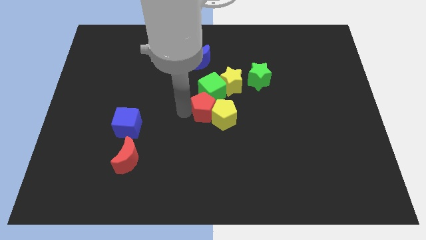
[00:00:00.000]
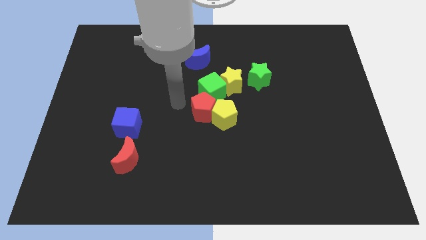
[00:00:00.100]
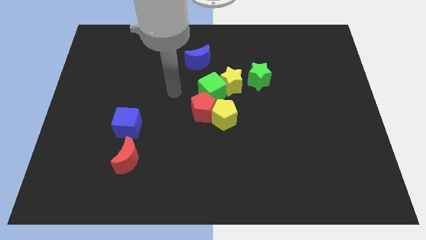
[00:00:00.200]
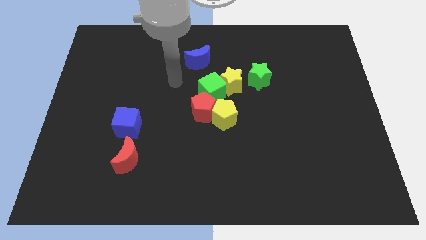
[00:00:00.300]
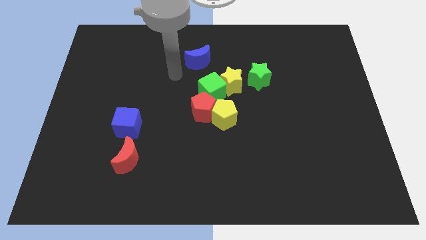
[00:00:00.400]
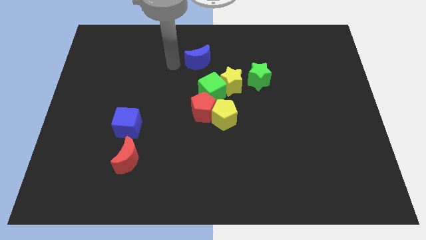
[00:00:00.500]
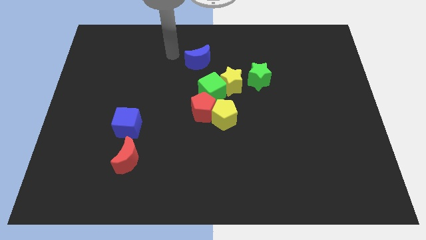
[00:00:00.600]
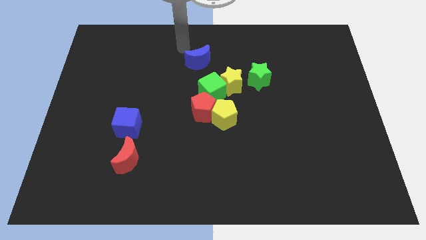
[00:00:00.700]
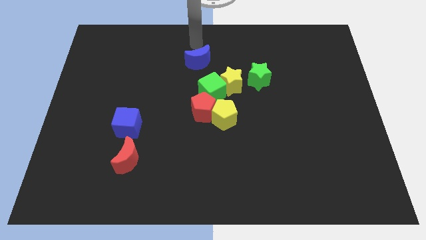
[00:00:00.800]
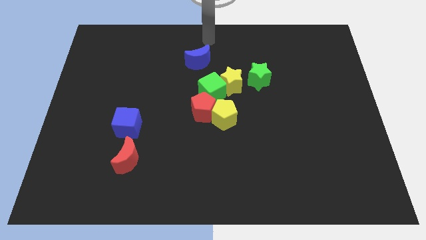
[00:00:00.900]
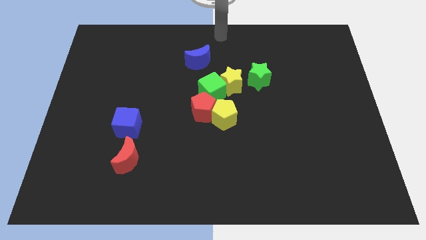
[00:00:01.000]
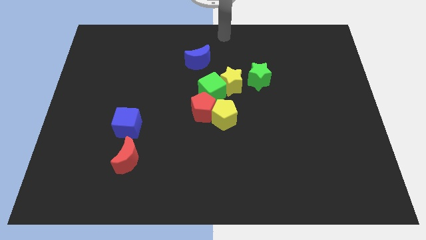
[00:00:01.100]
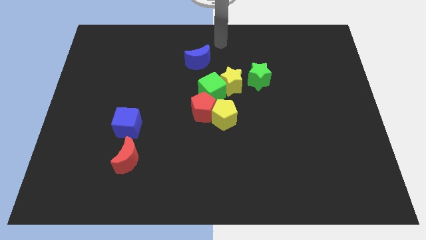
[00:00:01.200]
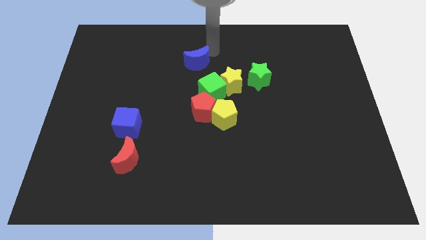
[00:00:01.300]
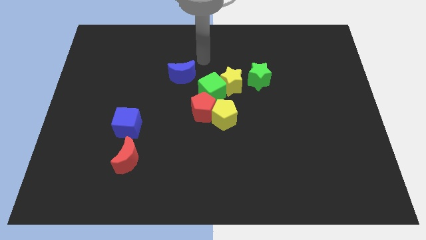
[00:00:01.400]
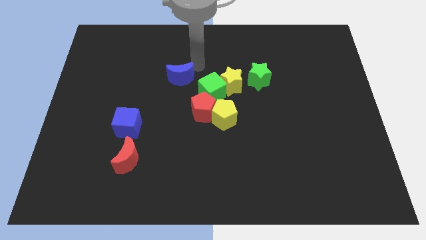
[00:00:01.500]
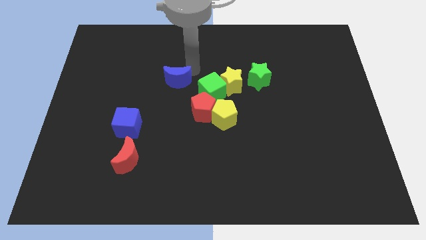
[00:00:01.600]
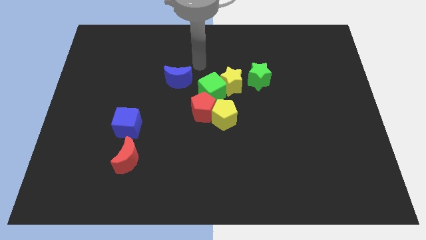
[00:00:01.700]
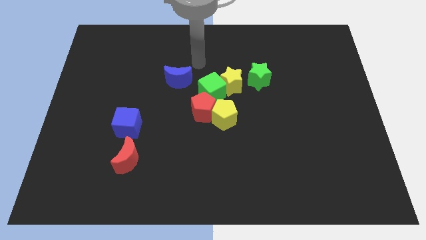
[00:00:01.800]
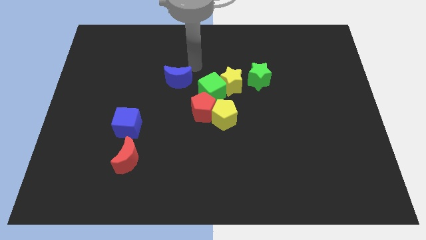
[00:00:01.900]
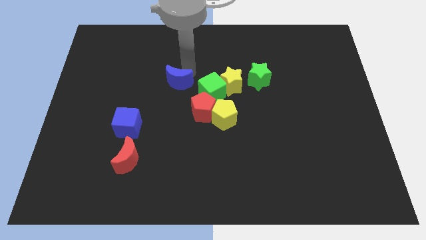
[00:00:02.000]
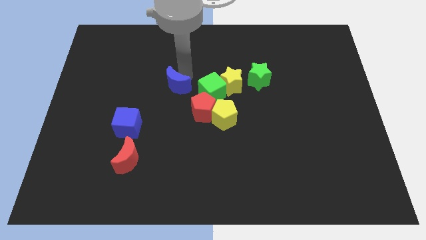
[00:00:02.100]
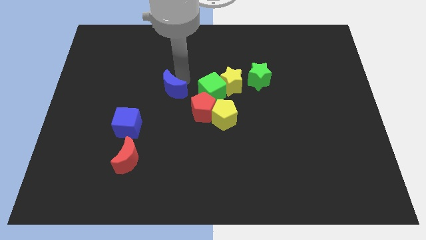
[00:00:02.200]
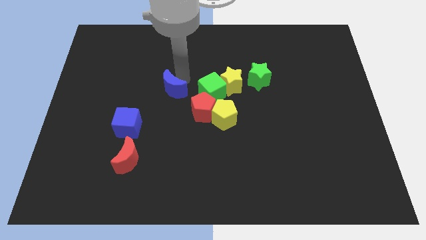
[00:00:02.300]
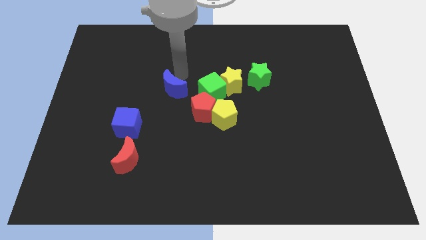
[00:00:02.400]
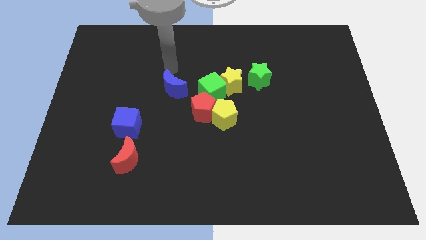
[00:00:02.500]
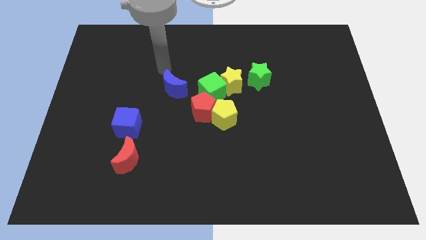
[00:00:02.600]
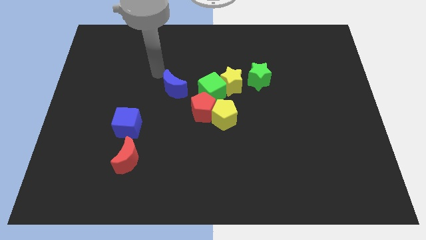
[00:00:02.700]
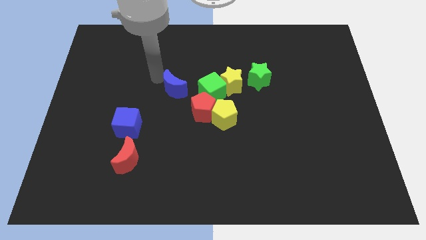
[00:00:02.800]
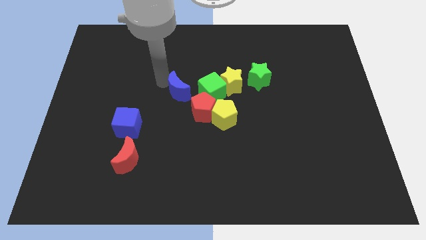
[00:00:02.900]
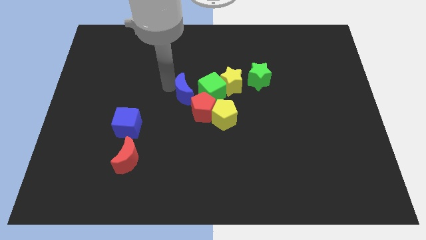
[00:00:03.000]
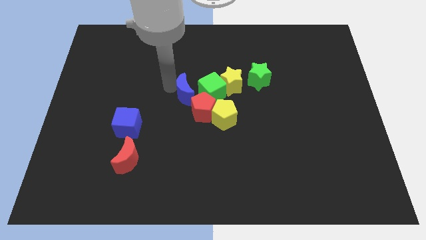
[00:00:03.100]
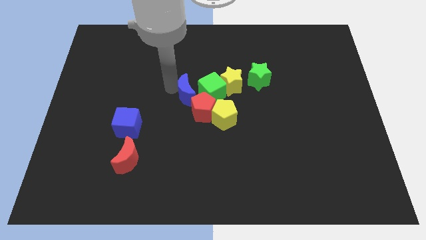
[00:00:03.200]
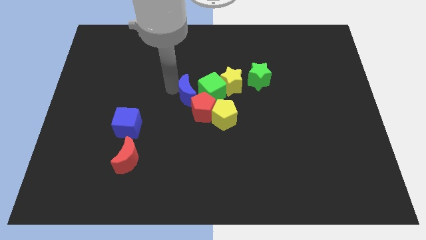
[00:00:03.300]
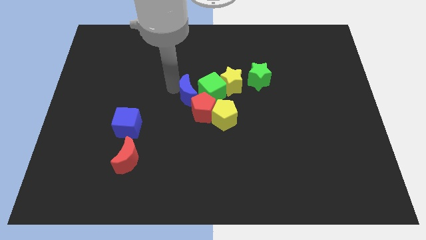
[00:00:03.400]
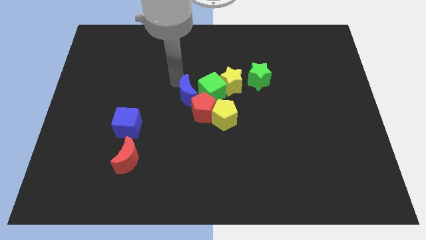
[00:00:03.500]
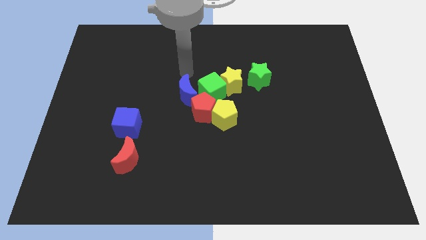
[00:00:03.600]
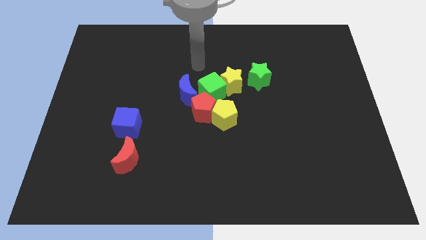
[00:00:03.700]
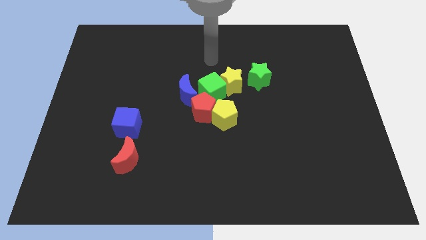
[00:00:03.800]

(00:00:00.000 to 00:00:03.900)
move blue moon into group of blocks

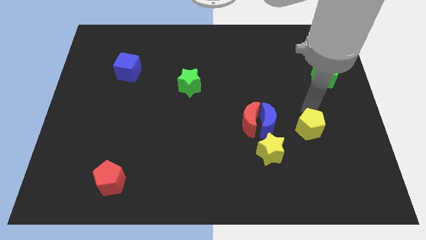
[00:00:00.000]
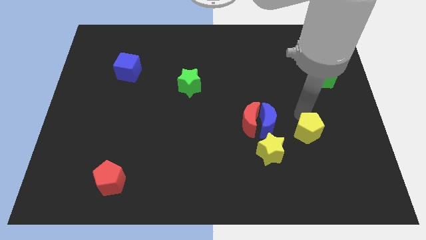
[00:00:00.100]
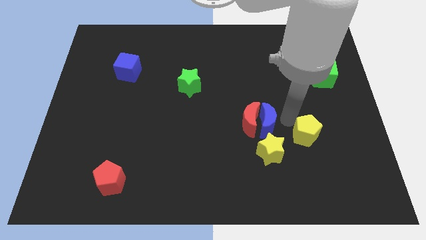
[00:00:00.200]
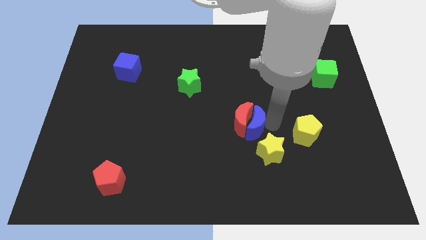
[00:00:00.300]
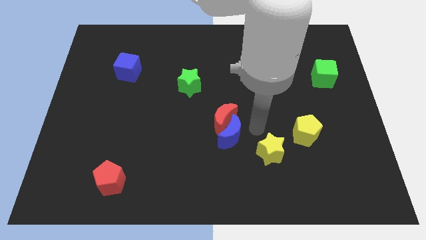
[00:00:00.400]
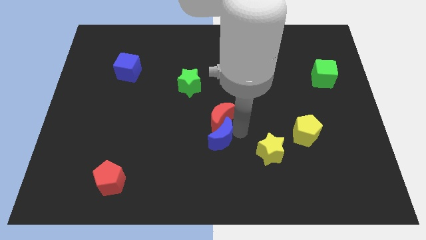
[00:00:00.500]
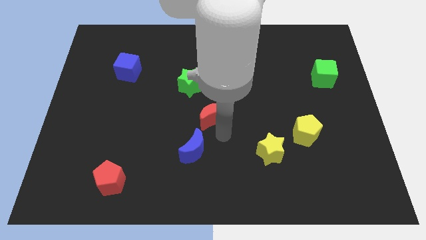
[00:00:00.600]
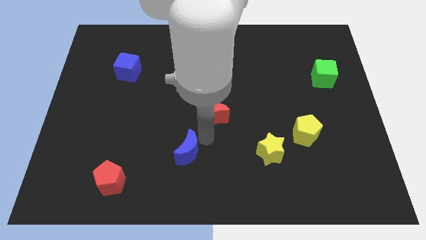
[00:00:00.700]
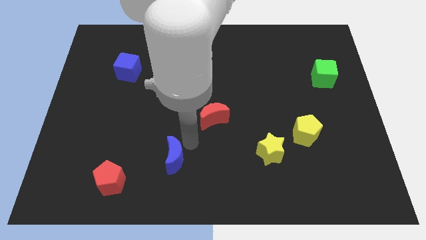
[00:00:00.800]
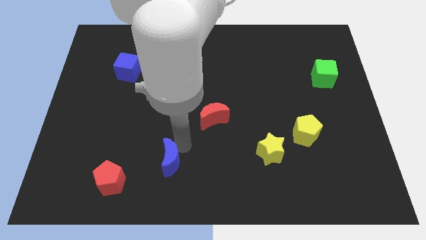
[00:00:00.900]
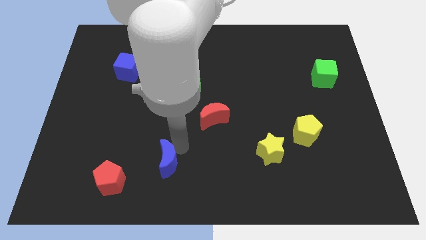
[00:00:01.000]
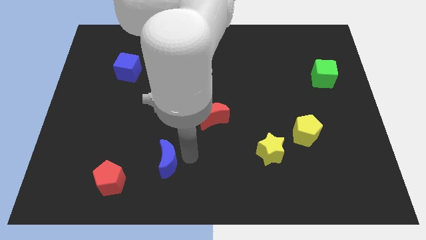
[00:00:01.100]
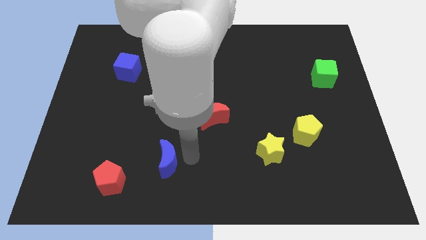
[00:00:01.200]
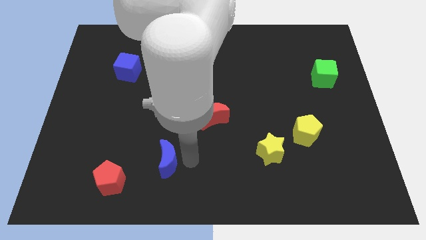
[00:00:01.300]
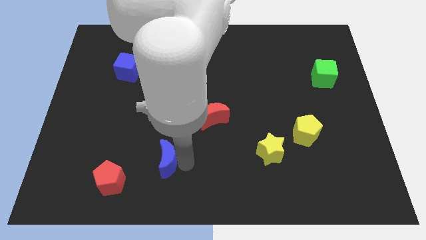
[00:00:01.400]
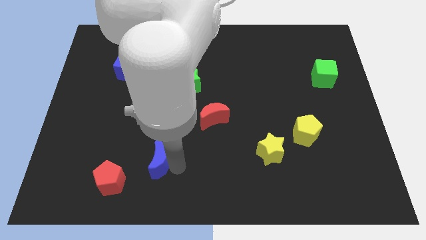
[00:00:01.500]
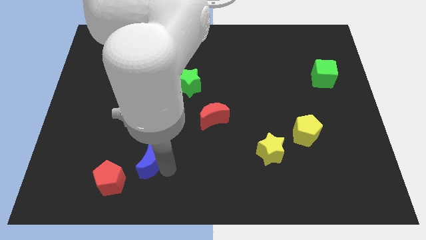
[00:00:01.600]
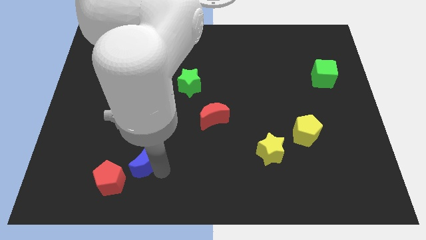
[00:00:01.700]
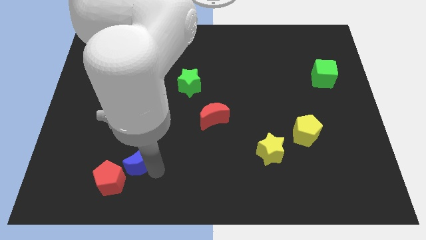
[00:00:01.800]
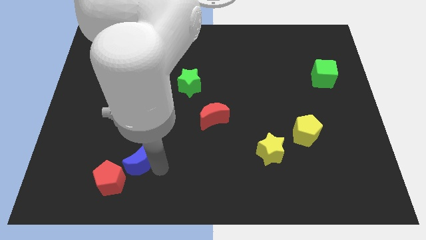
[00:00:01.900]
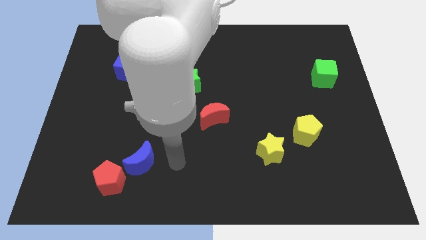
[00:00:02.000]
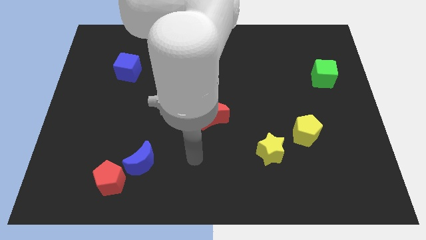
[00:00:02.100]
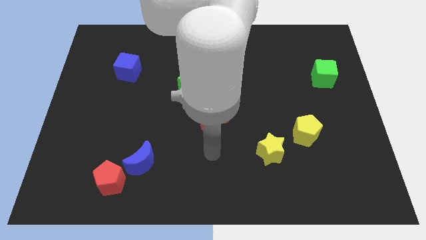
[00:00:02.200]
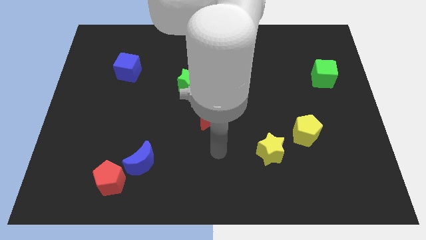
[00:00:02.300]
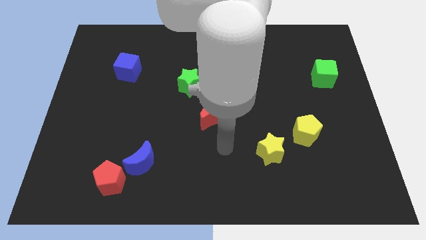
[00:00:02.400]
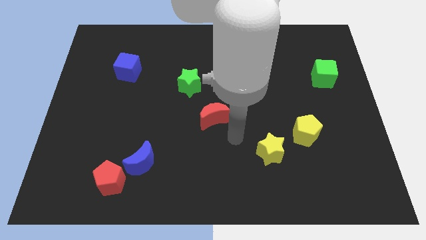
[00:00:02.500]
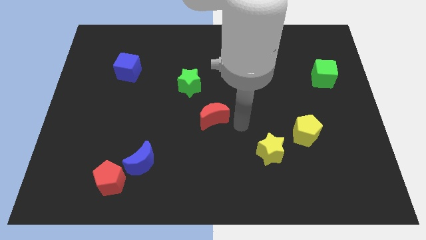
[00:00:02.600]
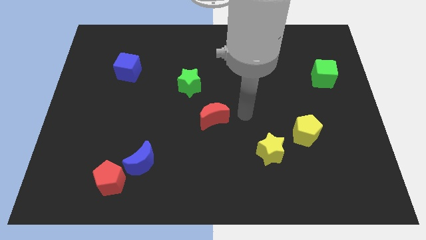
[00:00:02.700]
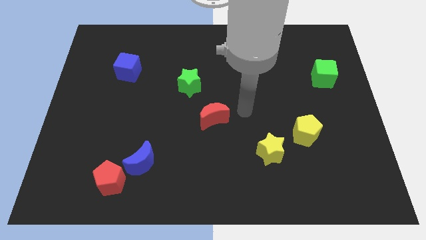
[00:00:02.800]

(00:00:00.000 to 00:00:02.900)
push the blue moon towards the red pentagon

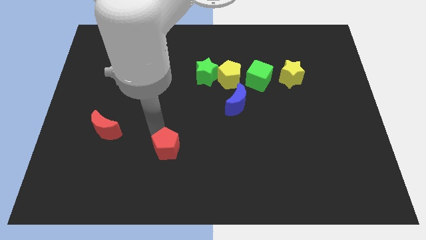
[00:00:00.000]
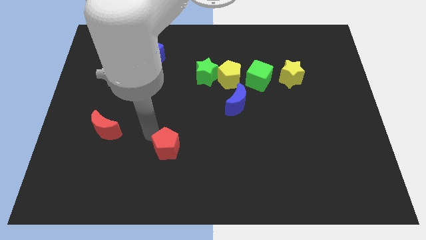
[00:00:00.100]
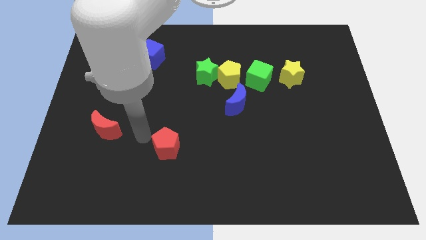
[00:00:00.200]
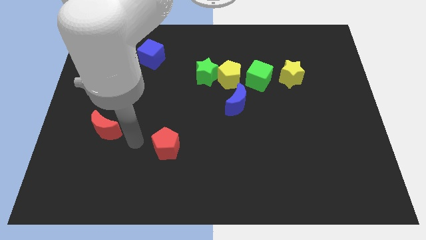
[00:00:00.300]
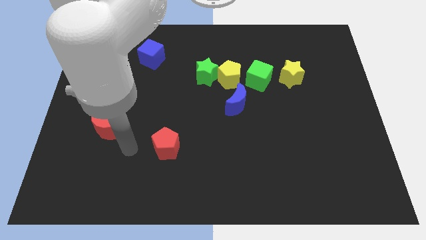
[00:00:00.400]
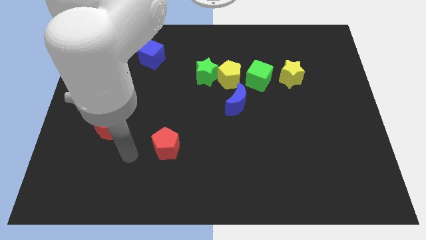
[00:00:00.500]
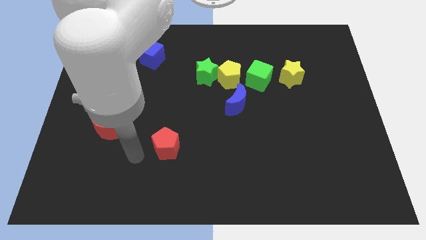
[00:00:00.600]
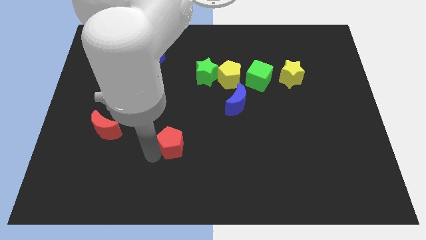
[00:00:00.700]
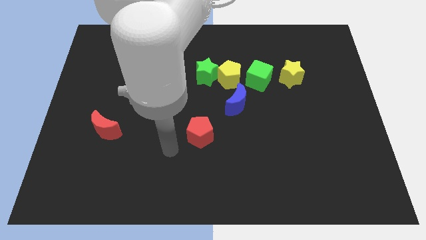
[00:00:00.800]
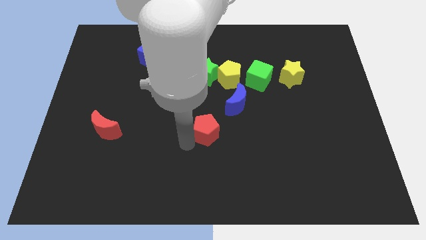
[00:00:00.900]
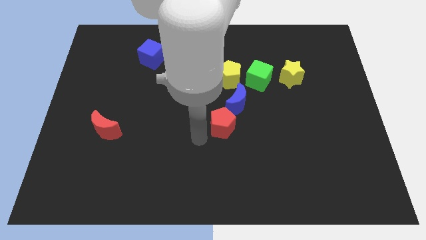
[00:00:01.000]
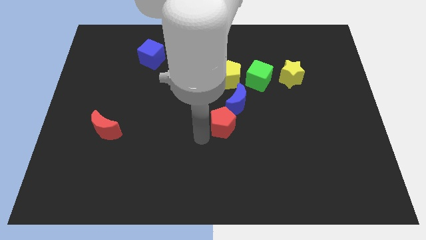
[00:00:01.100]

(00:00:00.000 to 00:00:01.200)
move the red pentagon close to the blue crescent

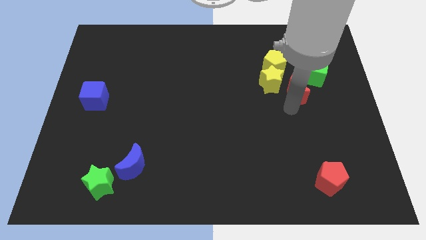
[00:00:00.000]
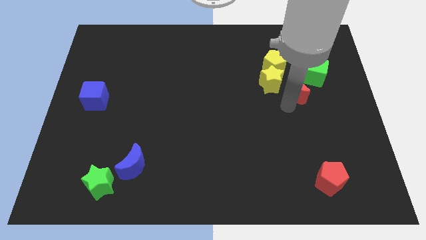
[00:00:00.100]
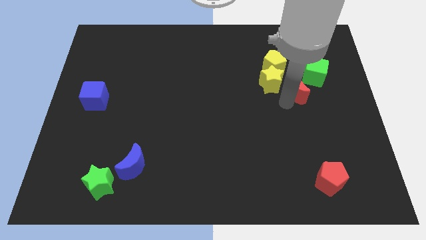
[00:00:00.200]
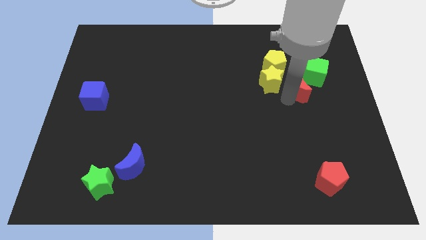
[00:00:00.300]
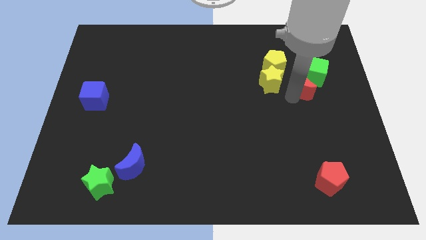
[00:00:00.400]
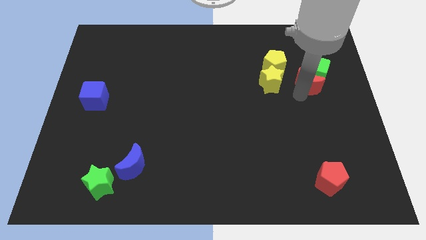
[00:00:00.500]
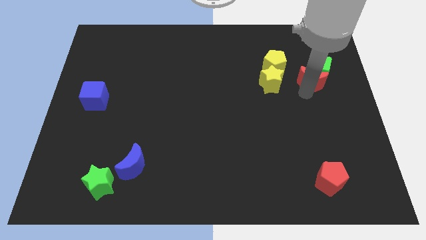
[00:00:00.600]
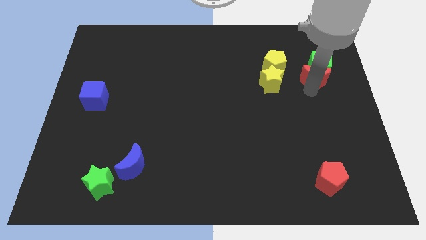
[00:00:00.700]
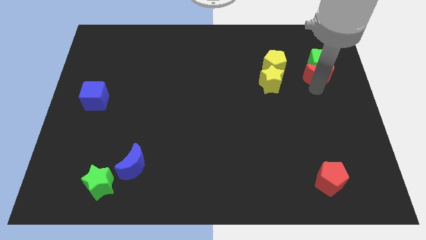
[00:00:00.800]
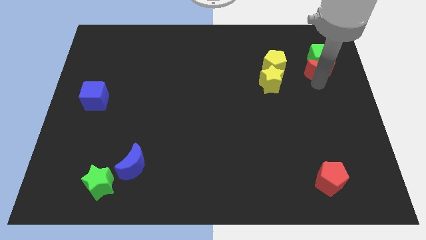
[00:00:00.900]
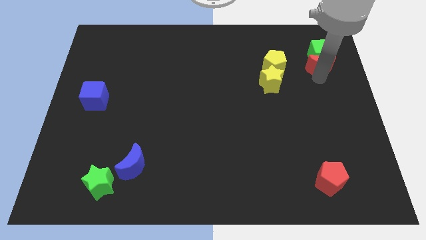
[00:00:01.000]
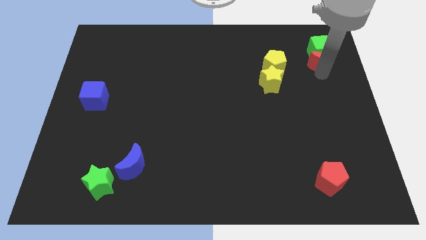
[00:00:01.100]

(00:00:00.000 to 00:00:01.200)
push red crescent into the green cube
